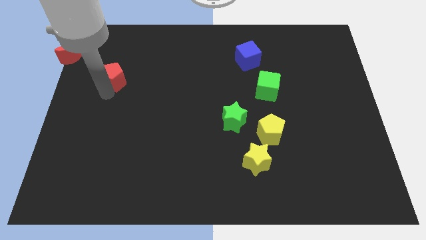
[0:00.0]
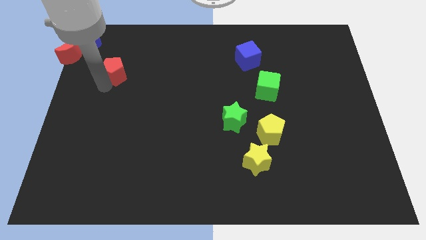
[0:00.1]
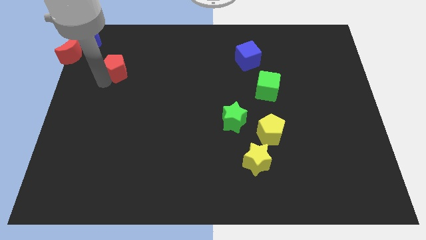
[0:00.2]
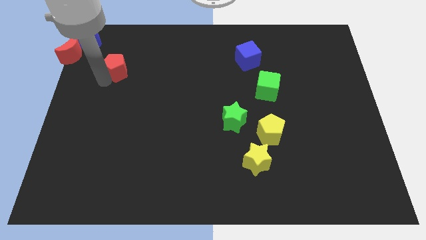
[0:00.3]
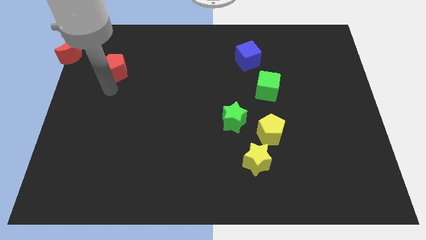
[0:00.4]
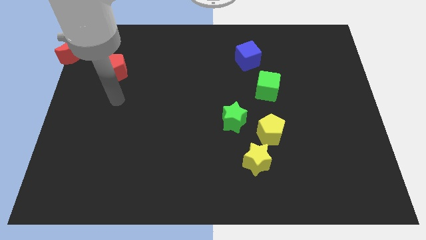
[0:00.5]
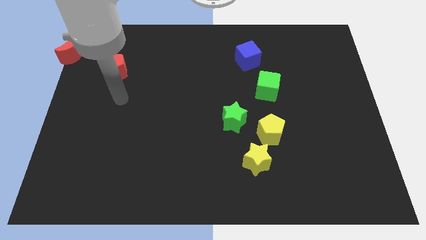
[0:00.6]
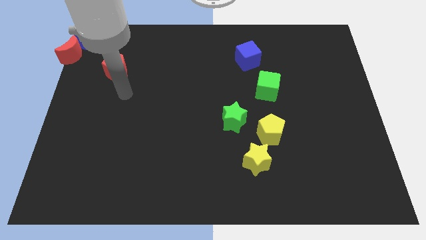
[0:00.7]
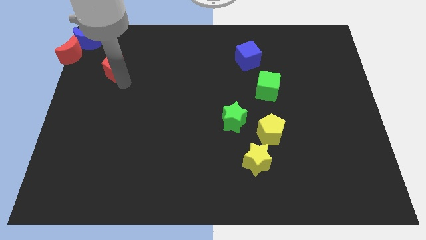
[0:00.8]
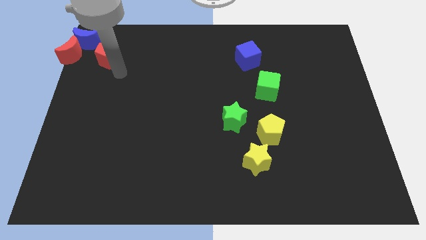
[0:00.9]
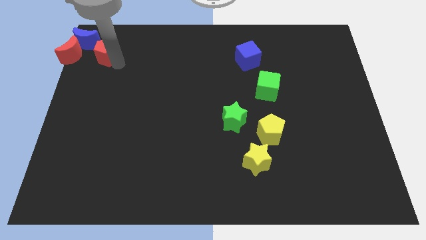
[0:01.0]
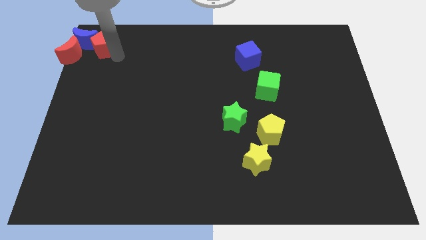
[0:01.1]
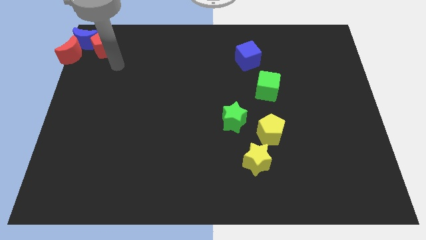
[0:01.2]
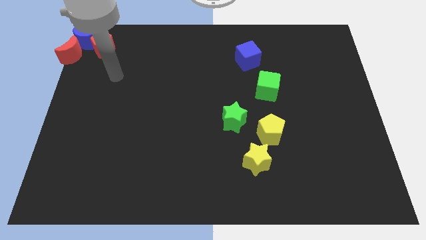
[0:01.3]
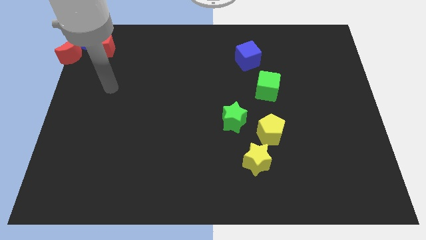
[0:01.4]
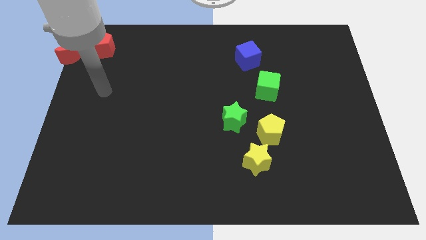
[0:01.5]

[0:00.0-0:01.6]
move the red pentagon into blue moon

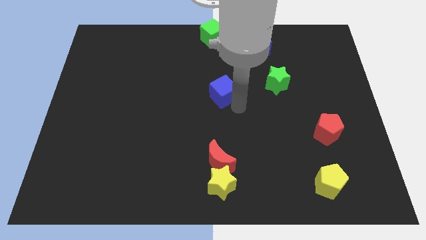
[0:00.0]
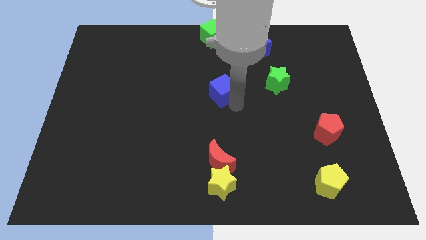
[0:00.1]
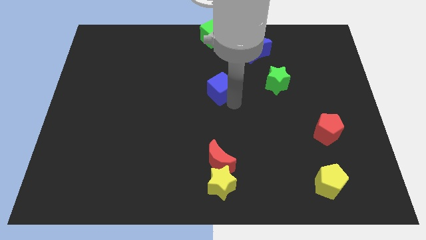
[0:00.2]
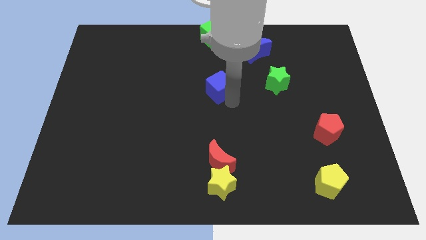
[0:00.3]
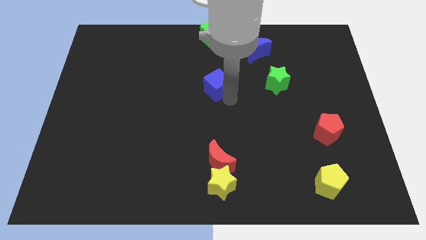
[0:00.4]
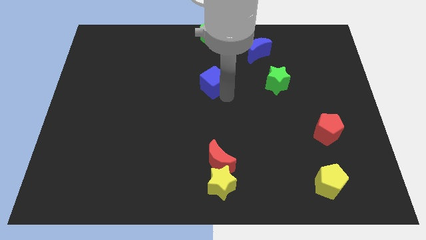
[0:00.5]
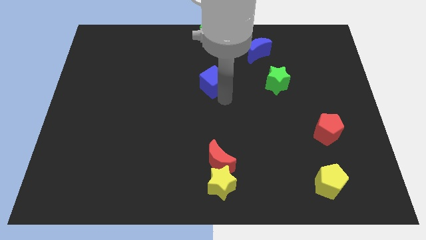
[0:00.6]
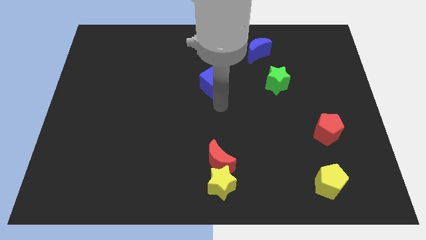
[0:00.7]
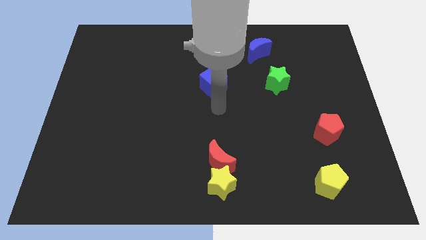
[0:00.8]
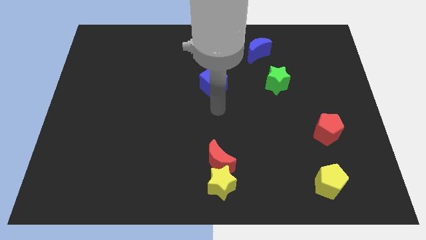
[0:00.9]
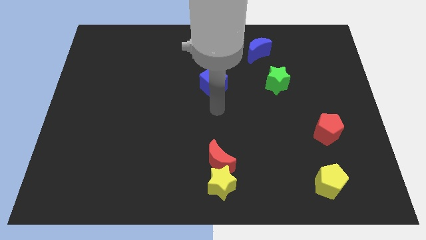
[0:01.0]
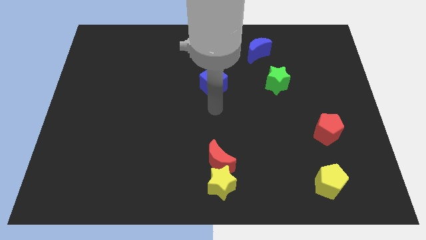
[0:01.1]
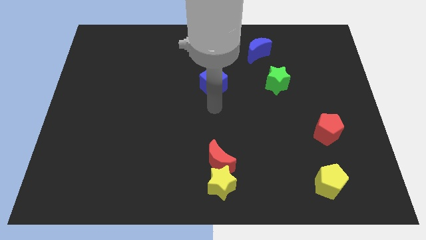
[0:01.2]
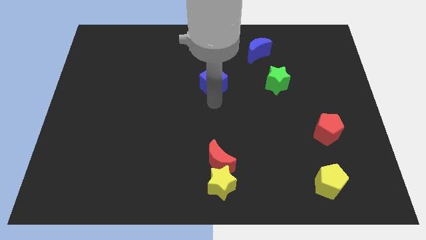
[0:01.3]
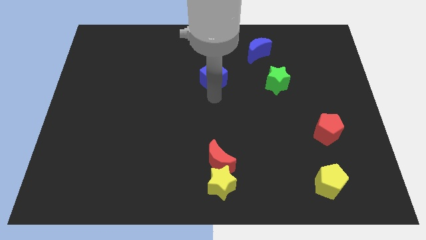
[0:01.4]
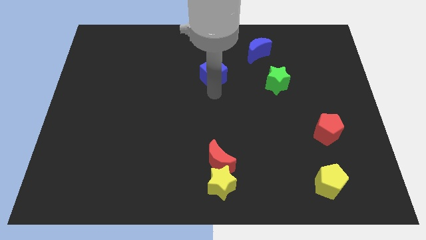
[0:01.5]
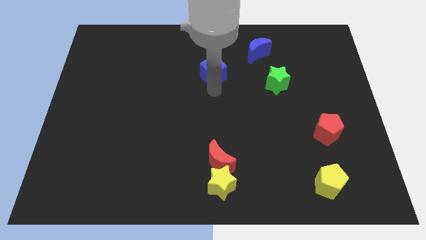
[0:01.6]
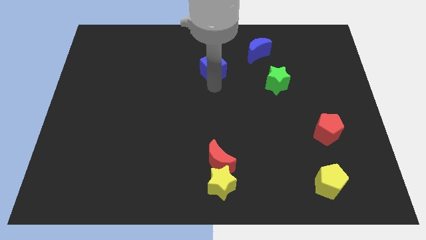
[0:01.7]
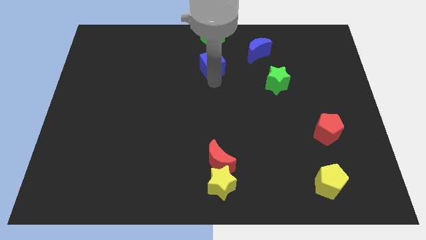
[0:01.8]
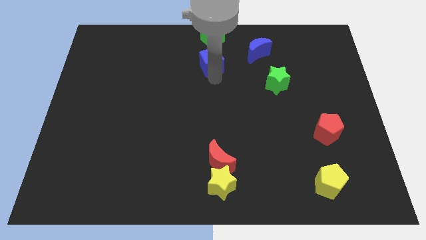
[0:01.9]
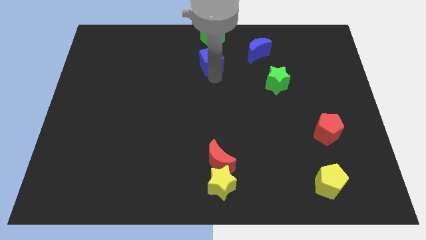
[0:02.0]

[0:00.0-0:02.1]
push the blue cube towards the top

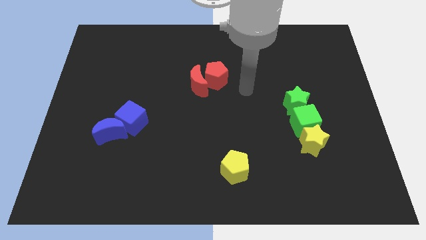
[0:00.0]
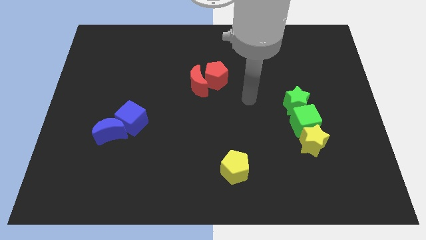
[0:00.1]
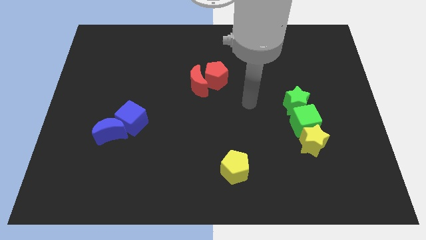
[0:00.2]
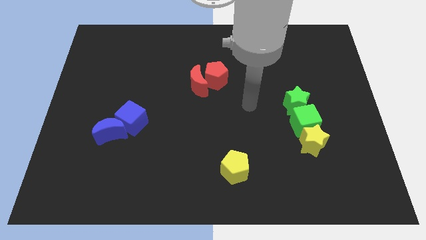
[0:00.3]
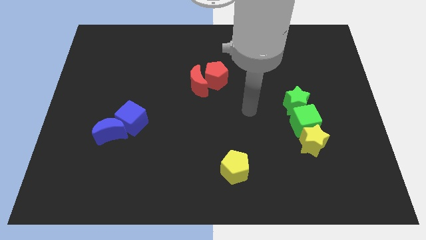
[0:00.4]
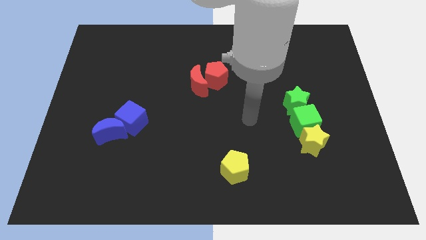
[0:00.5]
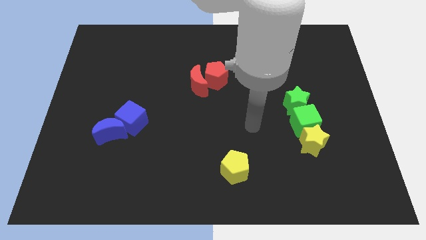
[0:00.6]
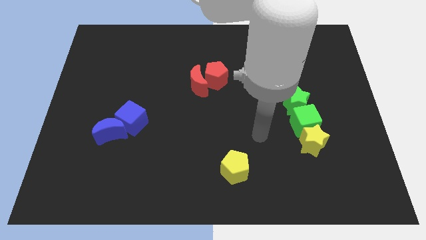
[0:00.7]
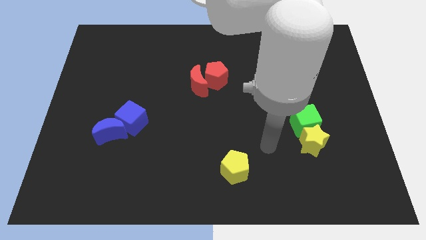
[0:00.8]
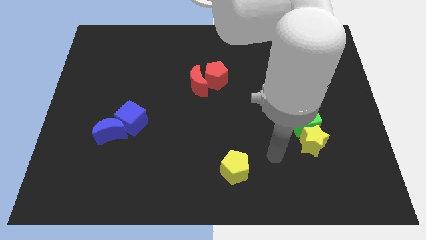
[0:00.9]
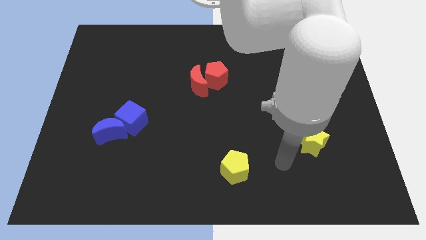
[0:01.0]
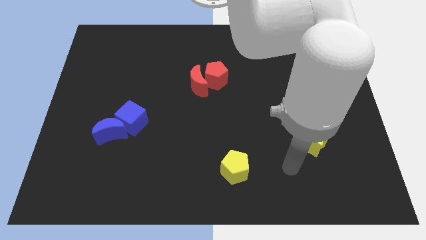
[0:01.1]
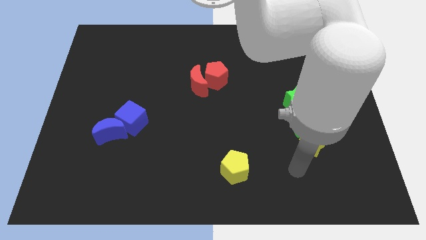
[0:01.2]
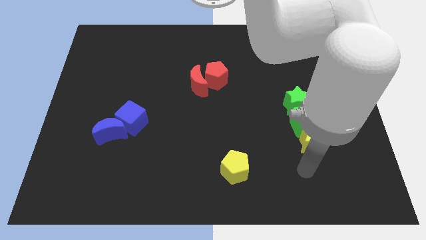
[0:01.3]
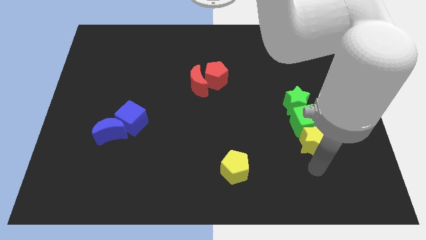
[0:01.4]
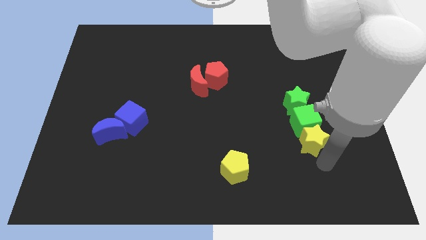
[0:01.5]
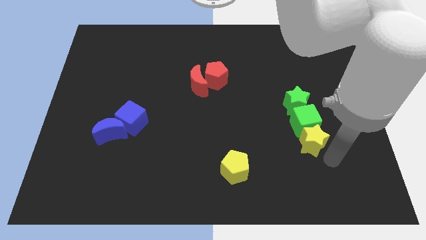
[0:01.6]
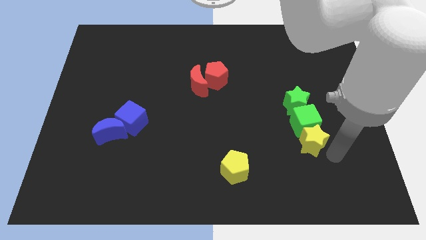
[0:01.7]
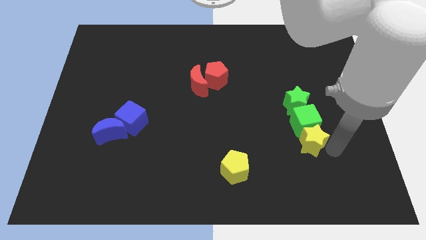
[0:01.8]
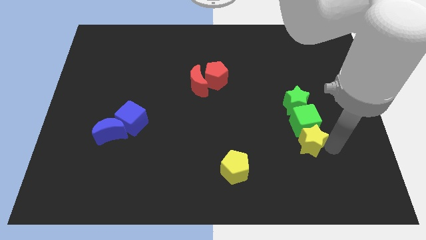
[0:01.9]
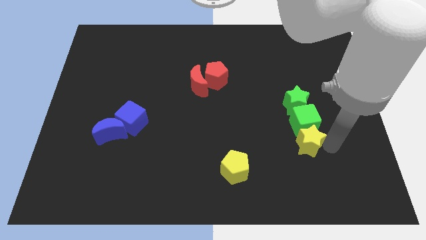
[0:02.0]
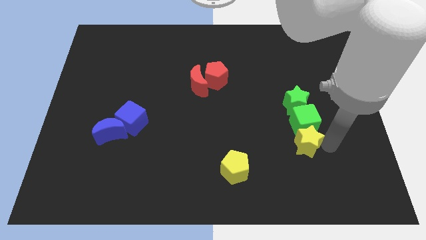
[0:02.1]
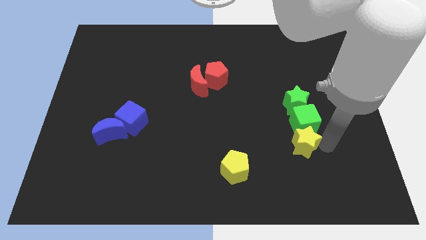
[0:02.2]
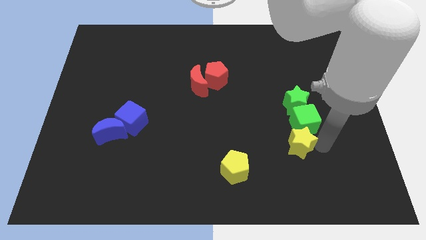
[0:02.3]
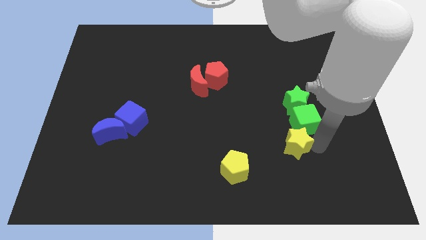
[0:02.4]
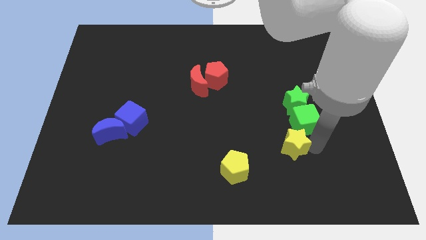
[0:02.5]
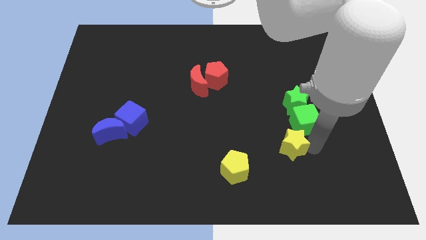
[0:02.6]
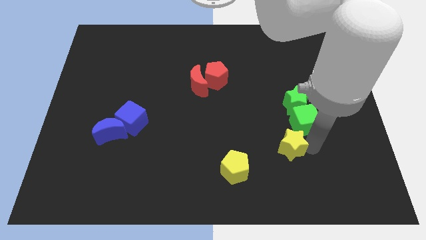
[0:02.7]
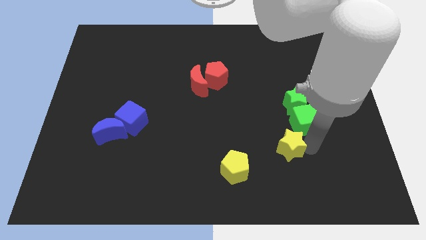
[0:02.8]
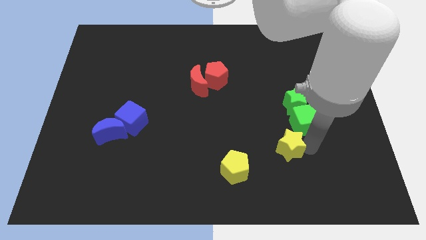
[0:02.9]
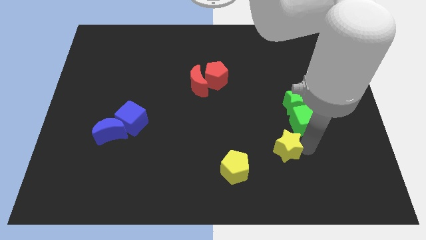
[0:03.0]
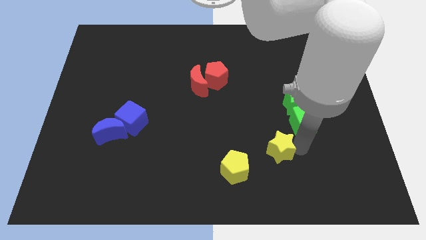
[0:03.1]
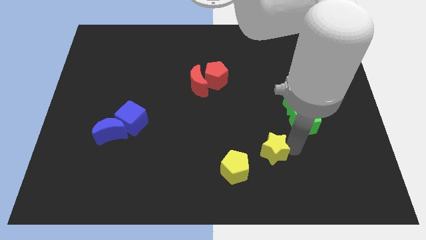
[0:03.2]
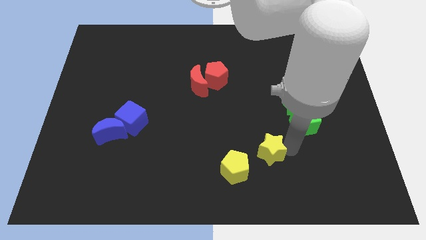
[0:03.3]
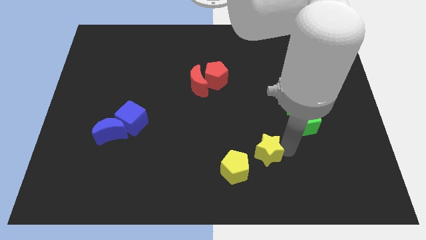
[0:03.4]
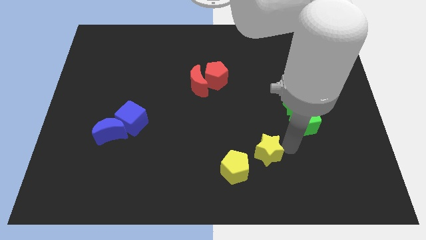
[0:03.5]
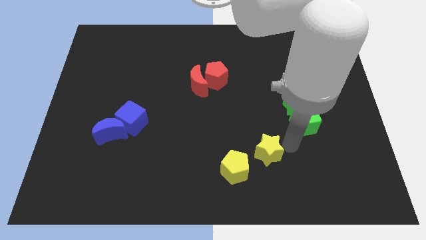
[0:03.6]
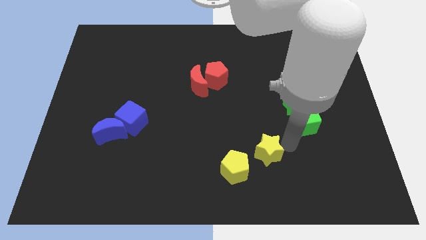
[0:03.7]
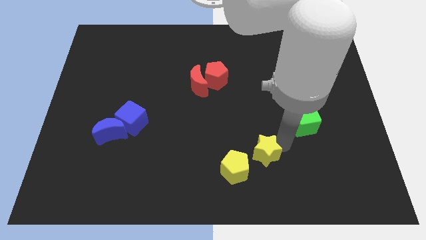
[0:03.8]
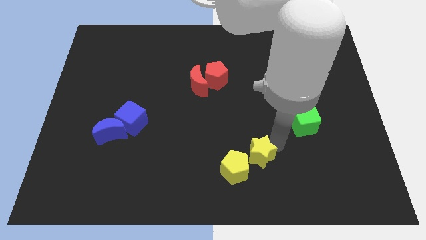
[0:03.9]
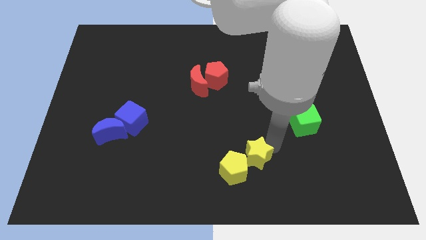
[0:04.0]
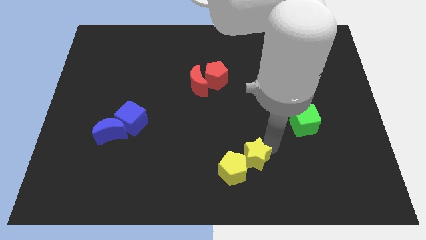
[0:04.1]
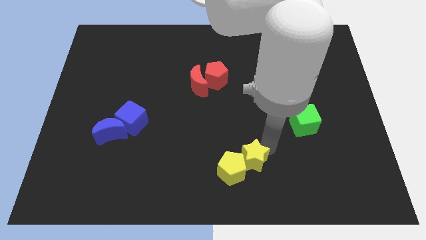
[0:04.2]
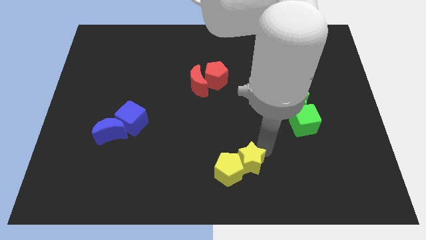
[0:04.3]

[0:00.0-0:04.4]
push the yellow star into the yellow pentagon

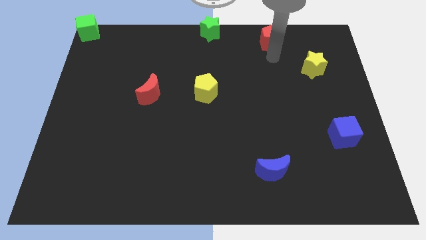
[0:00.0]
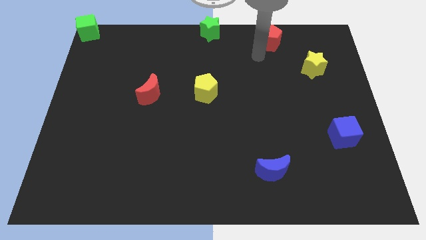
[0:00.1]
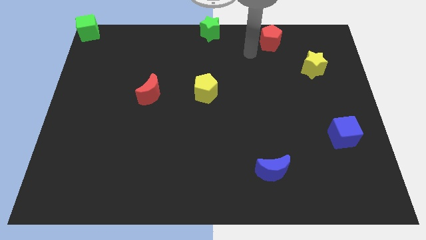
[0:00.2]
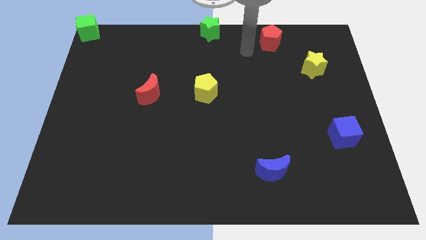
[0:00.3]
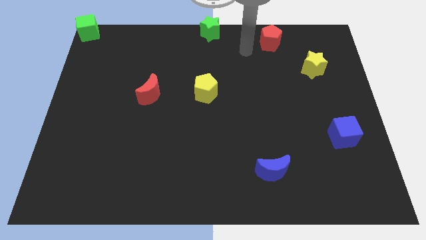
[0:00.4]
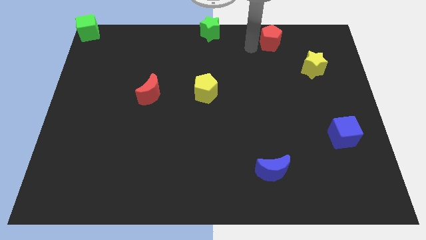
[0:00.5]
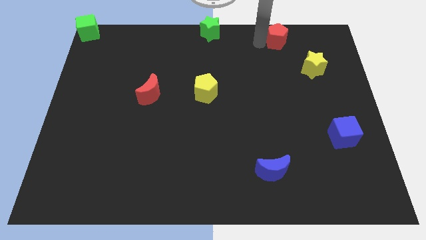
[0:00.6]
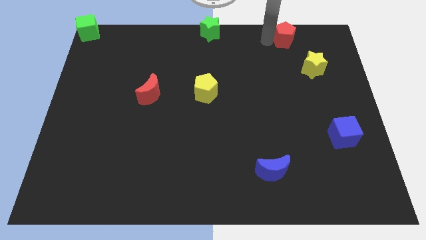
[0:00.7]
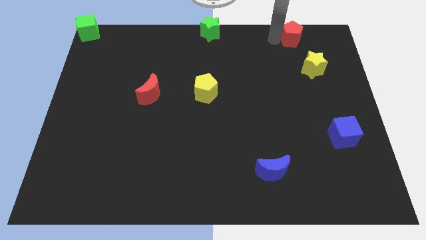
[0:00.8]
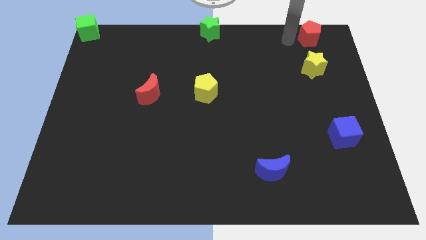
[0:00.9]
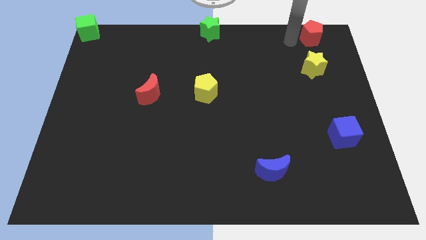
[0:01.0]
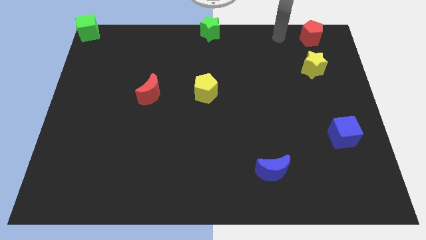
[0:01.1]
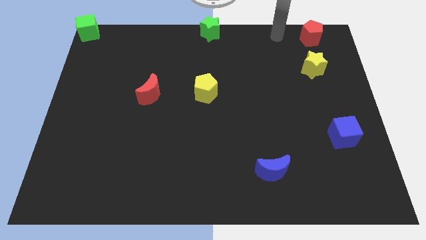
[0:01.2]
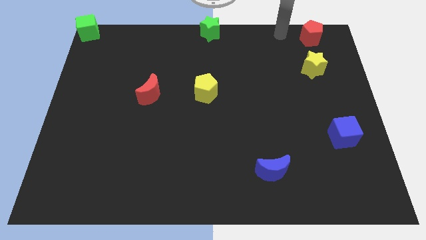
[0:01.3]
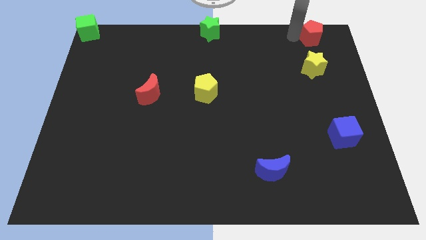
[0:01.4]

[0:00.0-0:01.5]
push red pentagon above yellow star
